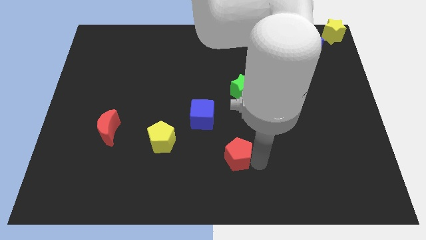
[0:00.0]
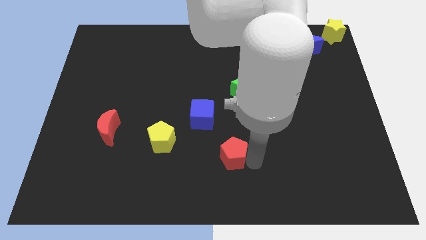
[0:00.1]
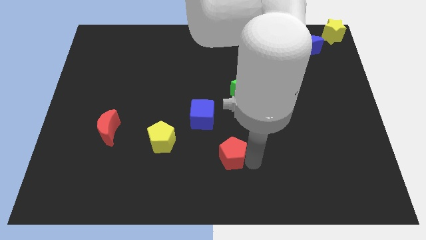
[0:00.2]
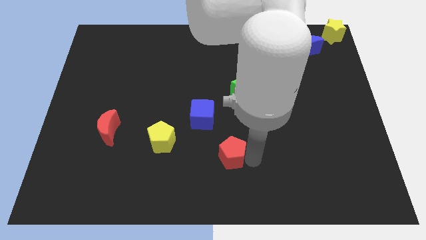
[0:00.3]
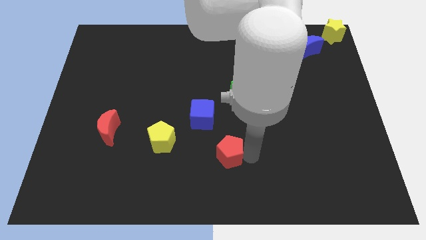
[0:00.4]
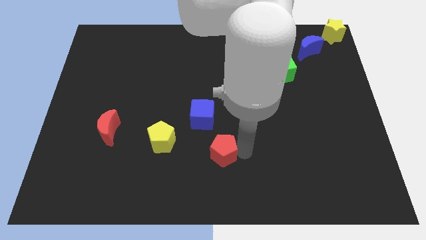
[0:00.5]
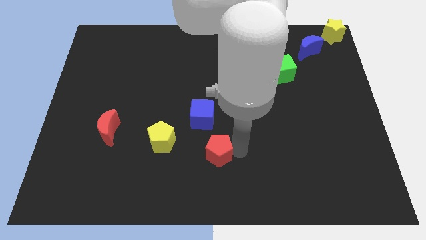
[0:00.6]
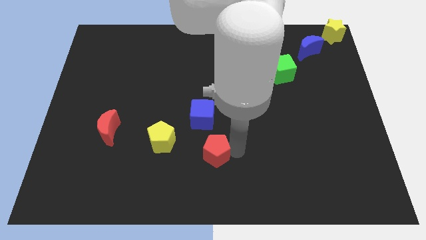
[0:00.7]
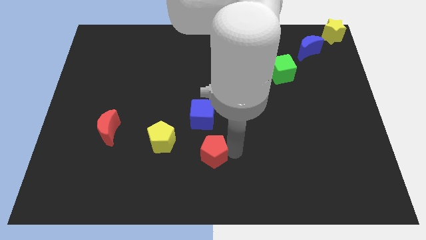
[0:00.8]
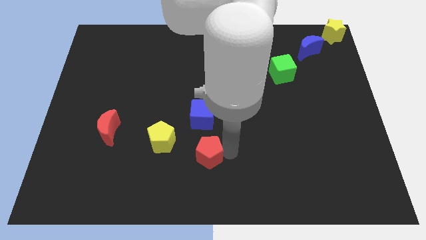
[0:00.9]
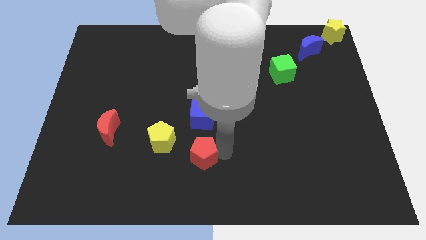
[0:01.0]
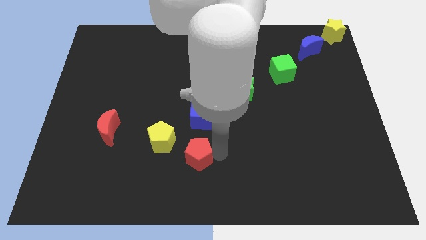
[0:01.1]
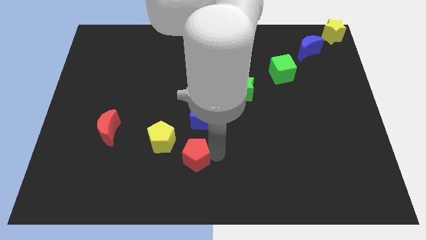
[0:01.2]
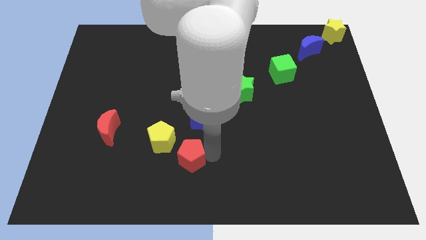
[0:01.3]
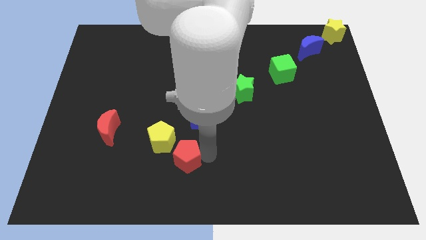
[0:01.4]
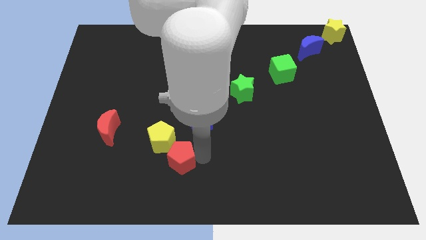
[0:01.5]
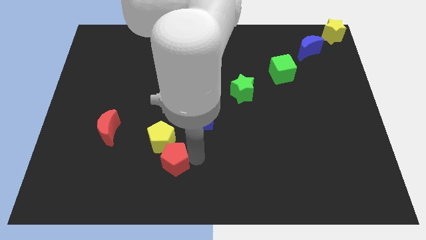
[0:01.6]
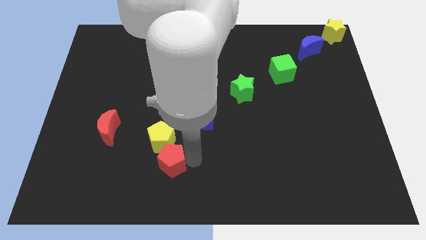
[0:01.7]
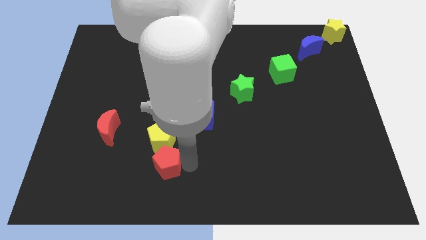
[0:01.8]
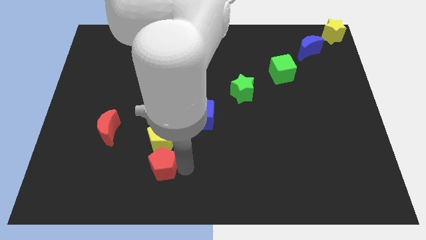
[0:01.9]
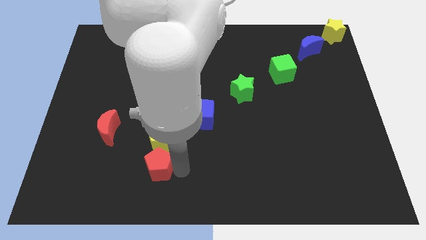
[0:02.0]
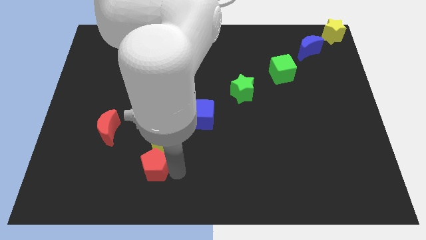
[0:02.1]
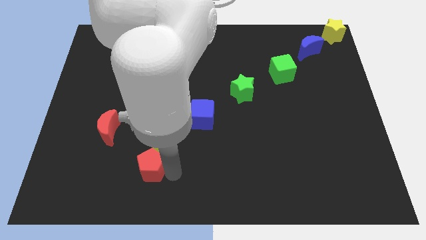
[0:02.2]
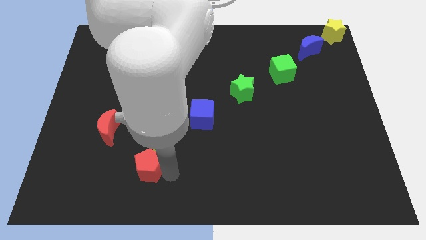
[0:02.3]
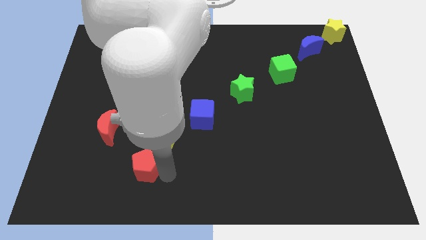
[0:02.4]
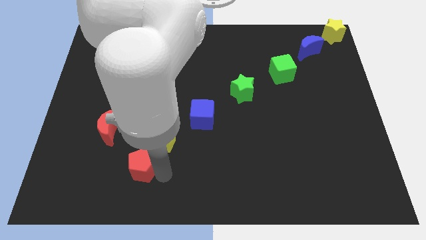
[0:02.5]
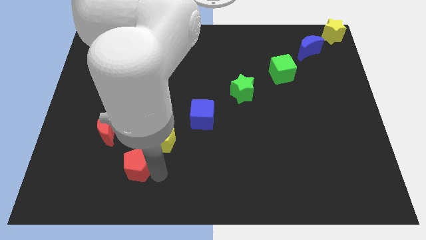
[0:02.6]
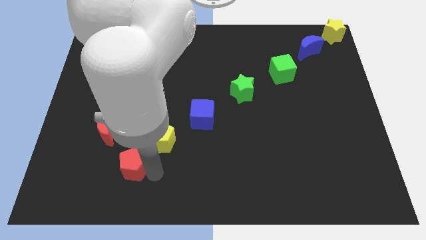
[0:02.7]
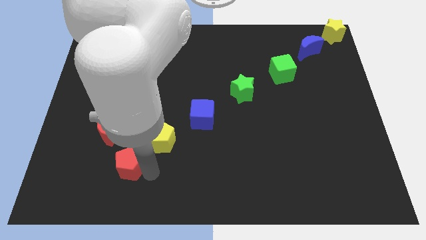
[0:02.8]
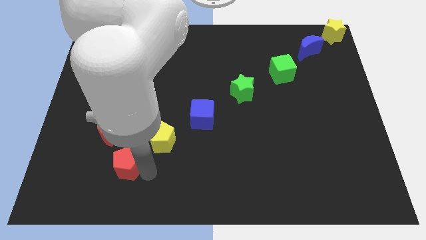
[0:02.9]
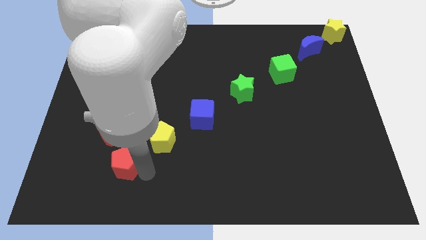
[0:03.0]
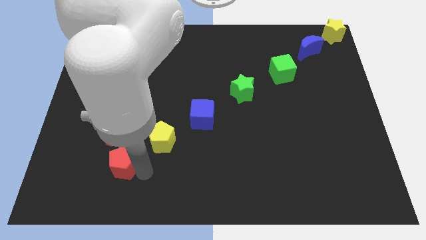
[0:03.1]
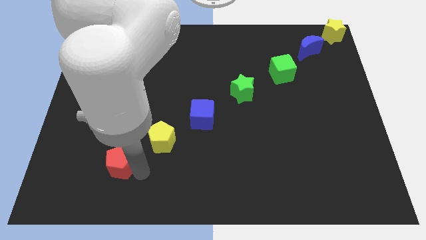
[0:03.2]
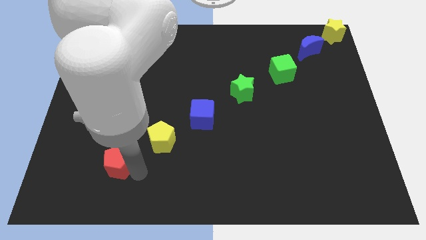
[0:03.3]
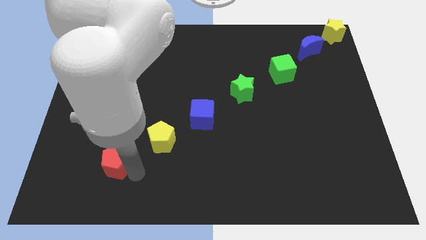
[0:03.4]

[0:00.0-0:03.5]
place red pentagon below red crescent

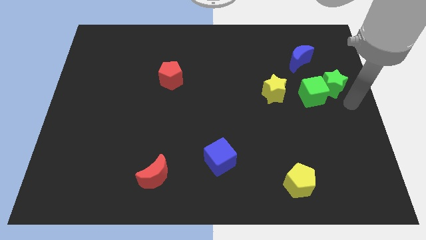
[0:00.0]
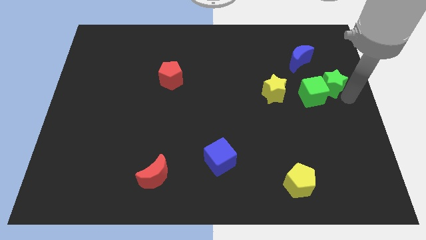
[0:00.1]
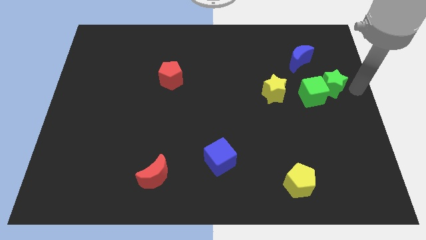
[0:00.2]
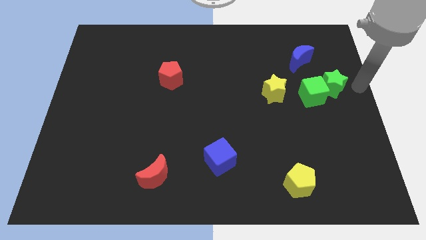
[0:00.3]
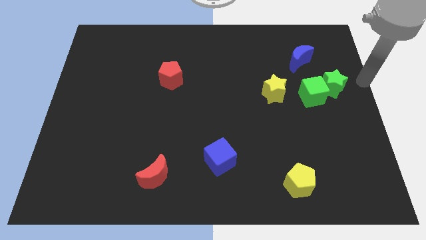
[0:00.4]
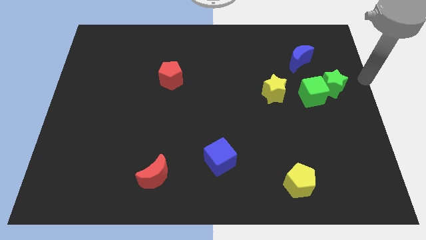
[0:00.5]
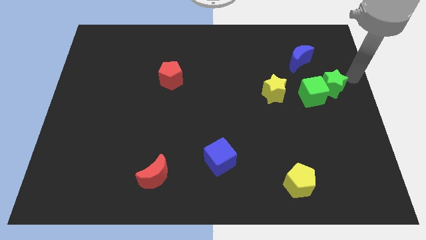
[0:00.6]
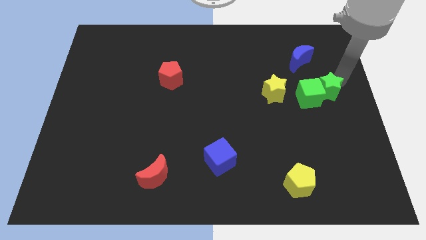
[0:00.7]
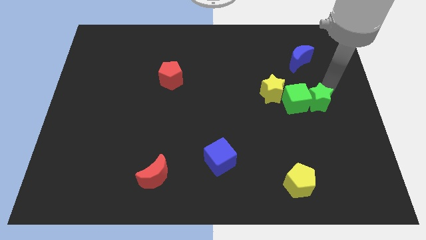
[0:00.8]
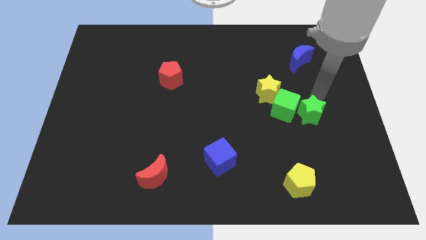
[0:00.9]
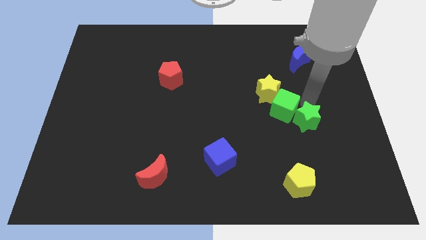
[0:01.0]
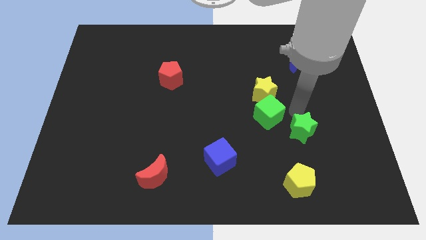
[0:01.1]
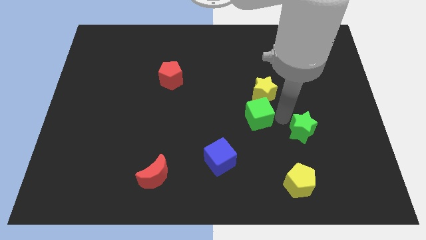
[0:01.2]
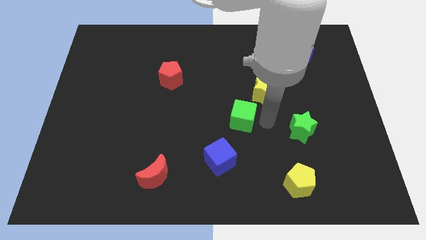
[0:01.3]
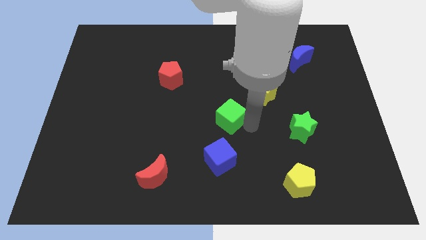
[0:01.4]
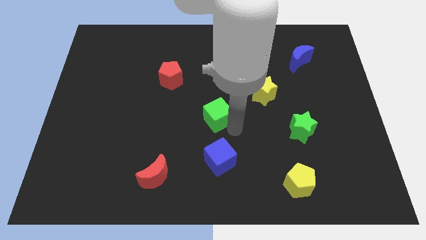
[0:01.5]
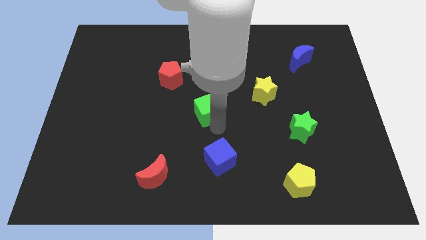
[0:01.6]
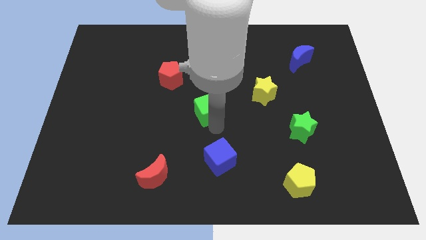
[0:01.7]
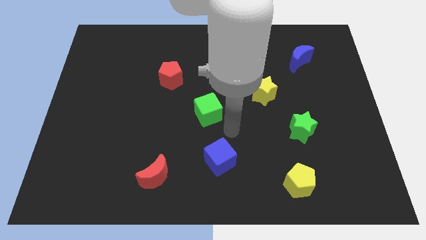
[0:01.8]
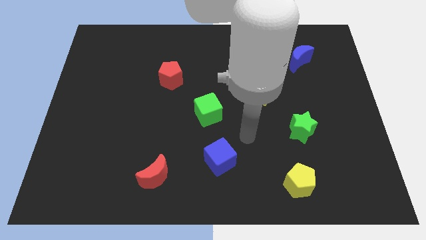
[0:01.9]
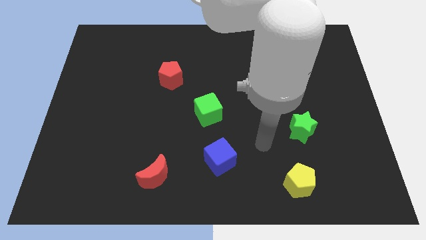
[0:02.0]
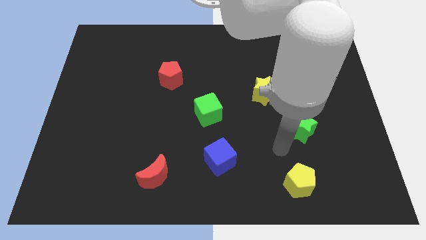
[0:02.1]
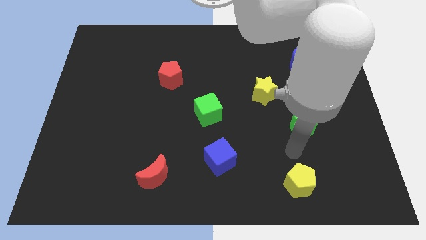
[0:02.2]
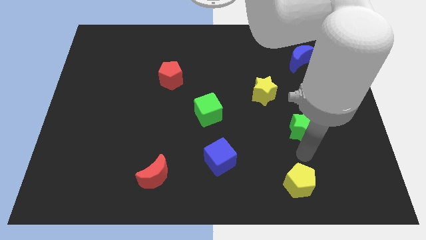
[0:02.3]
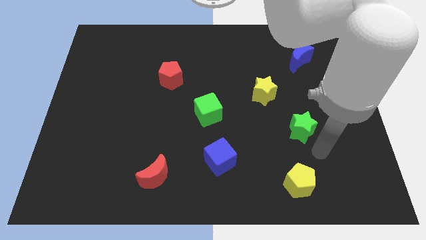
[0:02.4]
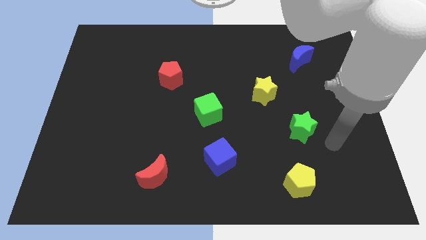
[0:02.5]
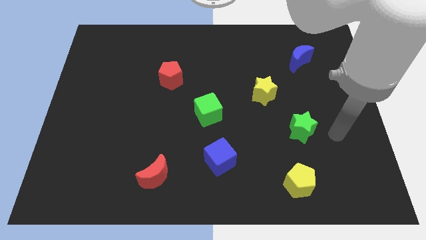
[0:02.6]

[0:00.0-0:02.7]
separate the green cube from the green star

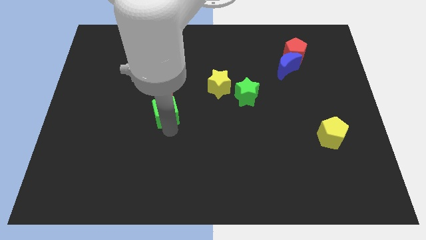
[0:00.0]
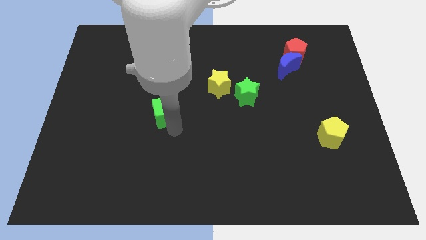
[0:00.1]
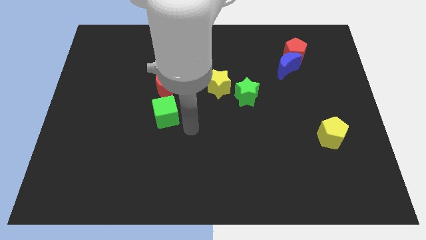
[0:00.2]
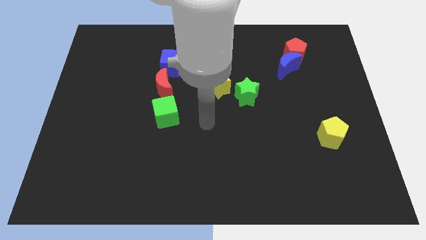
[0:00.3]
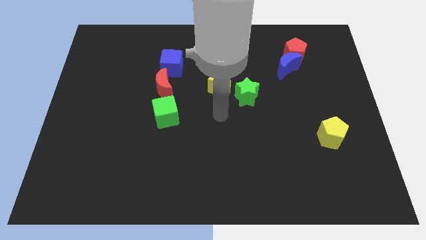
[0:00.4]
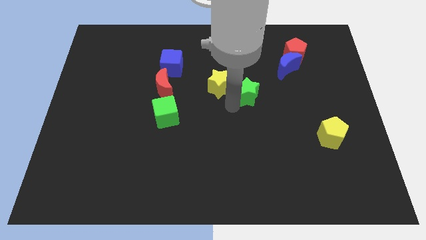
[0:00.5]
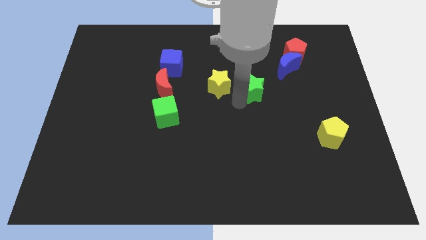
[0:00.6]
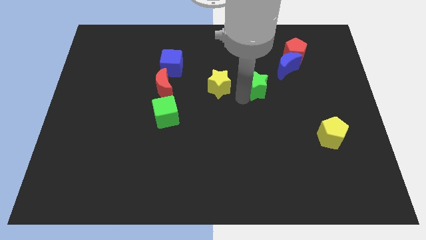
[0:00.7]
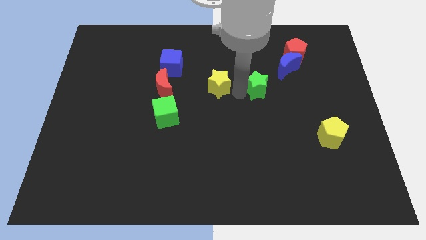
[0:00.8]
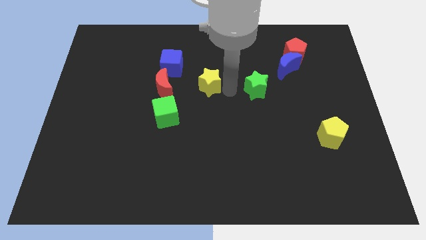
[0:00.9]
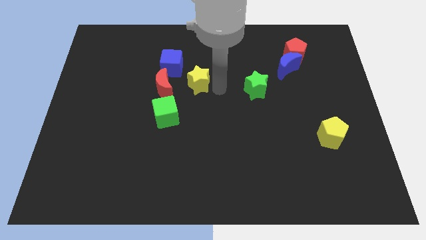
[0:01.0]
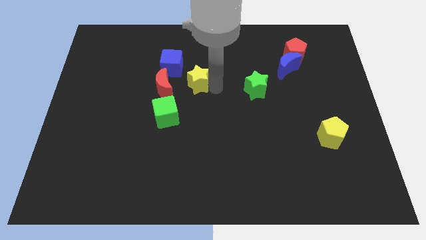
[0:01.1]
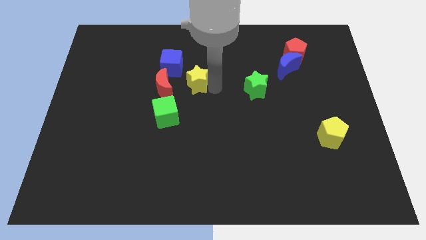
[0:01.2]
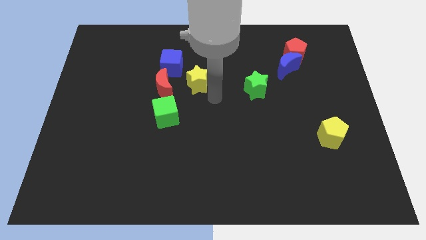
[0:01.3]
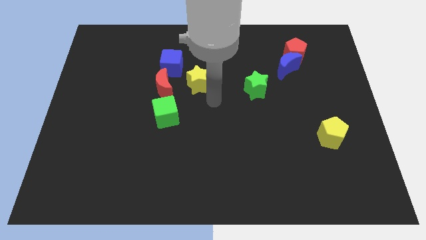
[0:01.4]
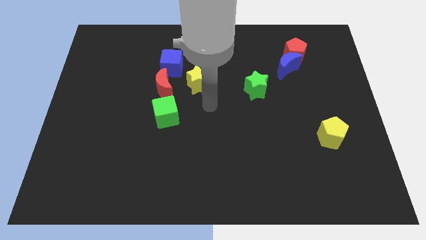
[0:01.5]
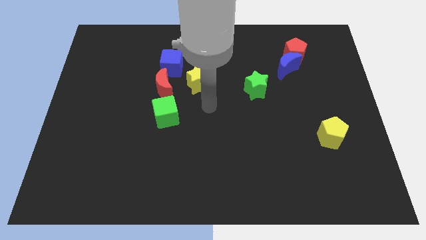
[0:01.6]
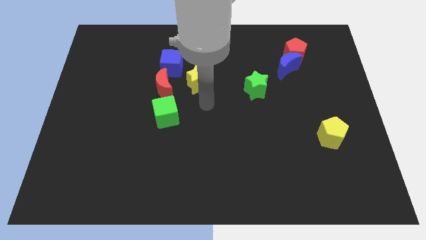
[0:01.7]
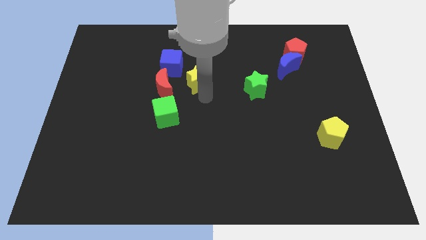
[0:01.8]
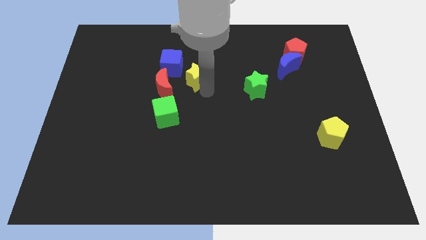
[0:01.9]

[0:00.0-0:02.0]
move the yellow star towards the right side of the red moon

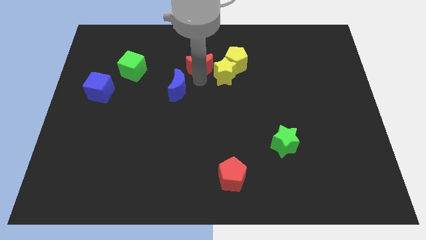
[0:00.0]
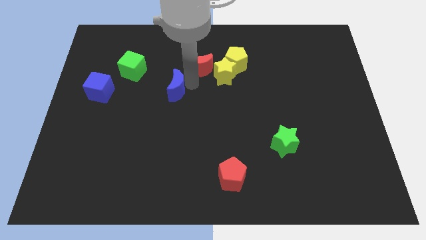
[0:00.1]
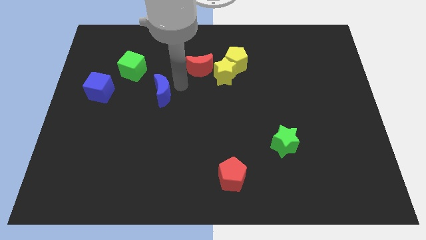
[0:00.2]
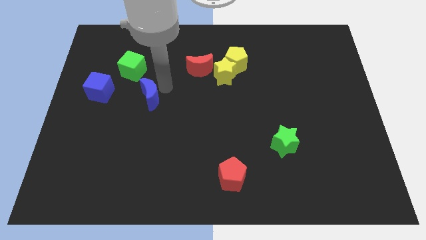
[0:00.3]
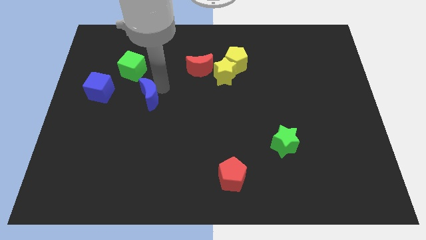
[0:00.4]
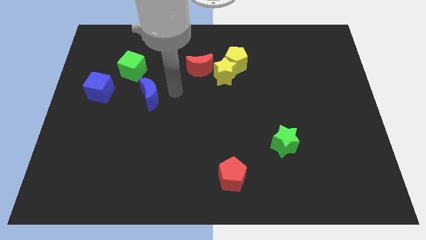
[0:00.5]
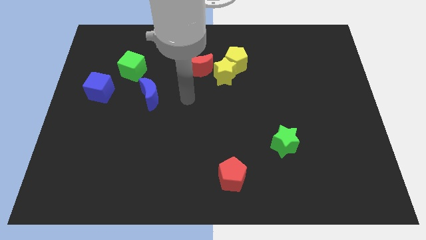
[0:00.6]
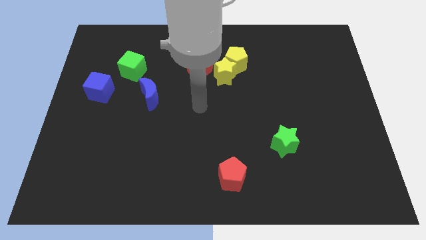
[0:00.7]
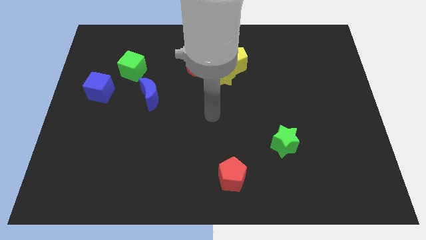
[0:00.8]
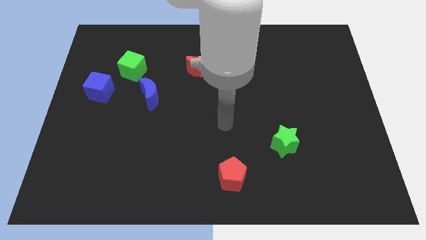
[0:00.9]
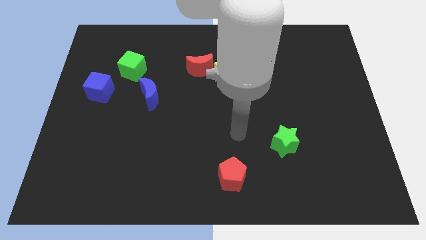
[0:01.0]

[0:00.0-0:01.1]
slightly push the blue moon towards the blue cube
